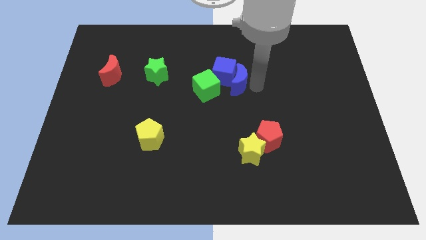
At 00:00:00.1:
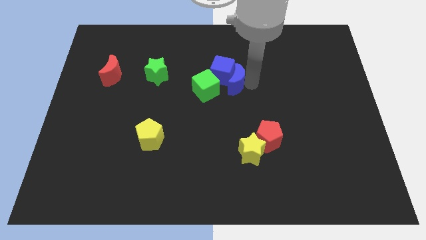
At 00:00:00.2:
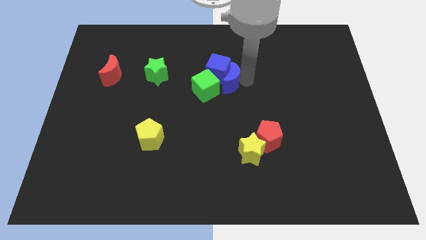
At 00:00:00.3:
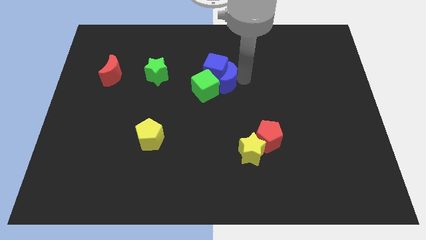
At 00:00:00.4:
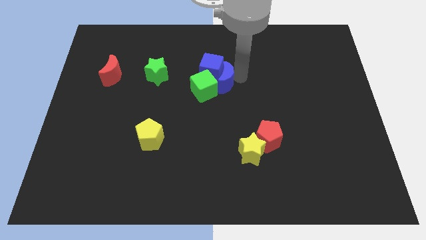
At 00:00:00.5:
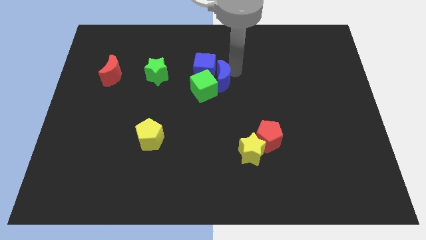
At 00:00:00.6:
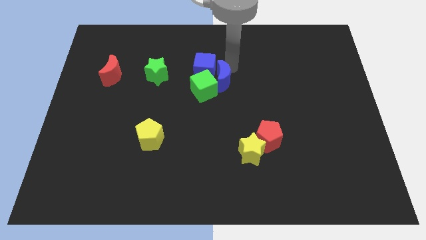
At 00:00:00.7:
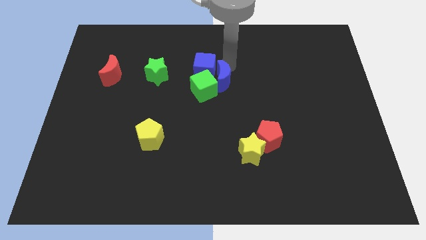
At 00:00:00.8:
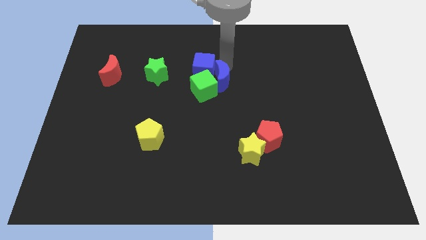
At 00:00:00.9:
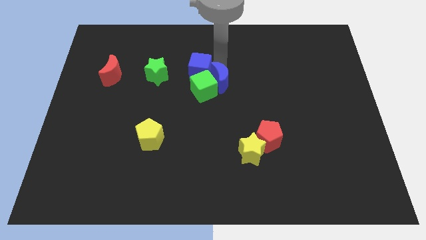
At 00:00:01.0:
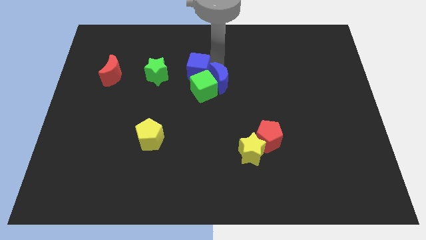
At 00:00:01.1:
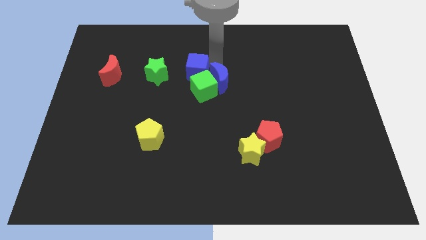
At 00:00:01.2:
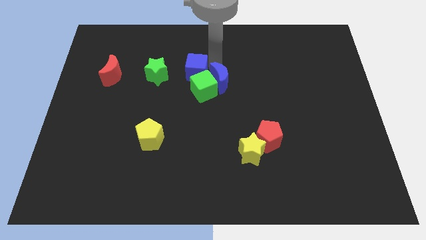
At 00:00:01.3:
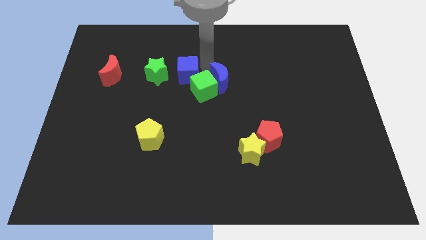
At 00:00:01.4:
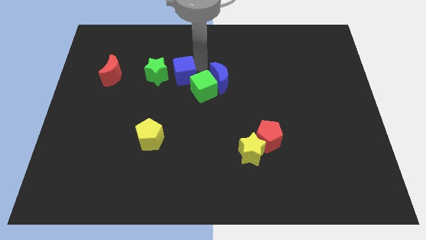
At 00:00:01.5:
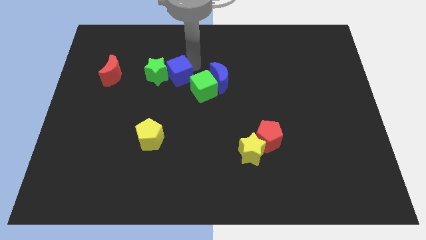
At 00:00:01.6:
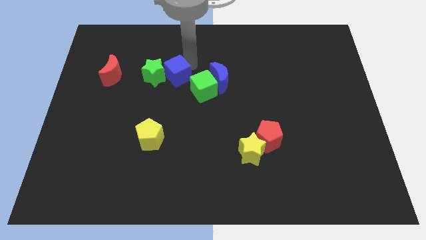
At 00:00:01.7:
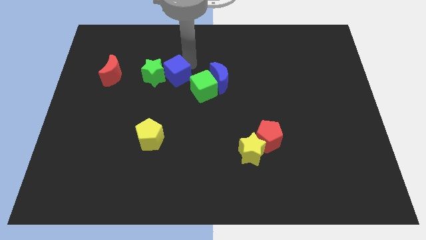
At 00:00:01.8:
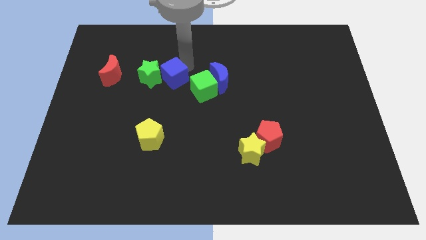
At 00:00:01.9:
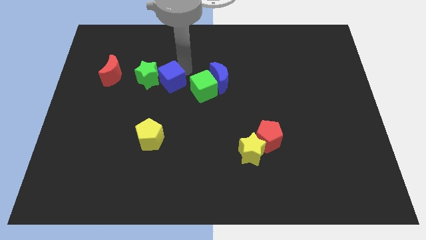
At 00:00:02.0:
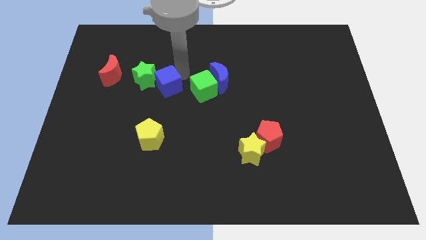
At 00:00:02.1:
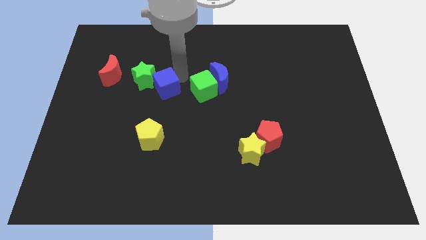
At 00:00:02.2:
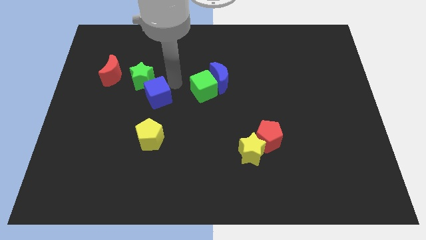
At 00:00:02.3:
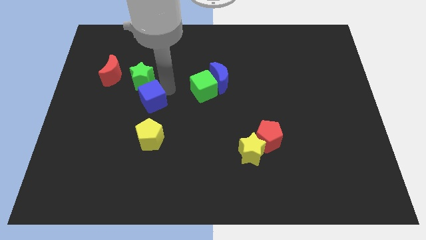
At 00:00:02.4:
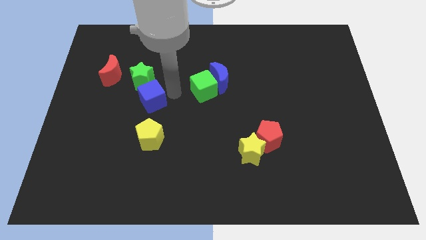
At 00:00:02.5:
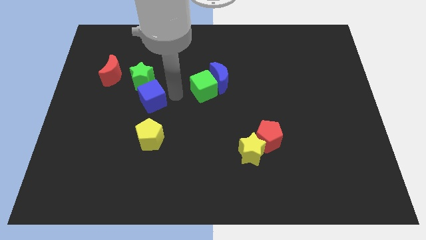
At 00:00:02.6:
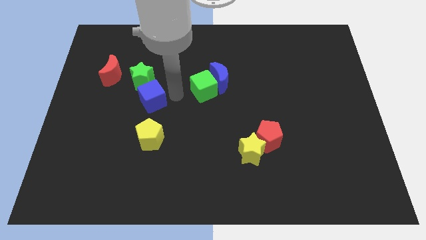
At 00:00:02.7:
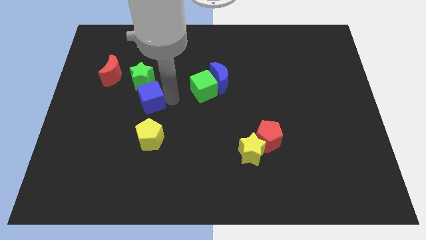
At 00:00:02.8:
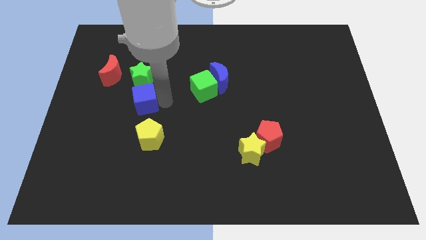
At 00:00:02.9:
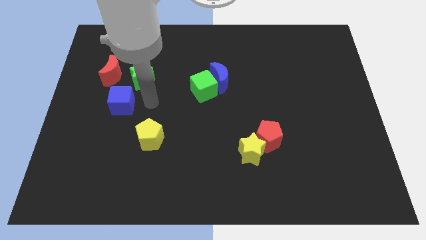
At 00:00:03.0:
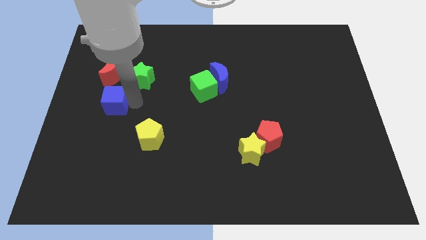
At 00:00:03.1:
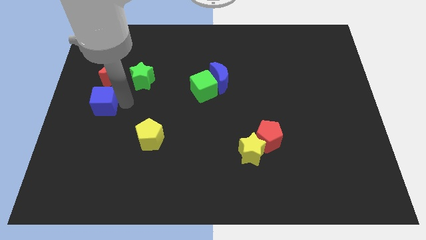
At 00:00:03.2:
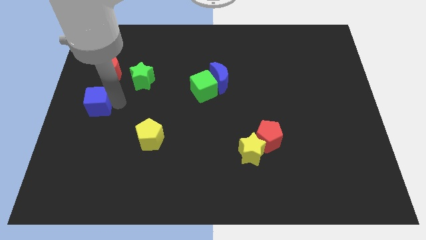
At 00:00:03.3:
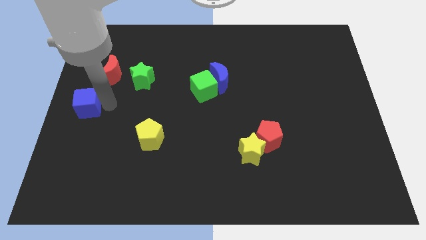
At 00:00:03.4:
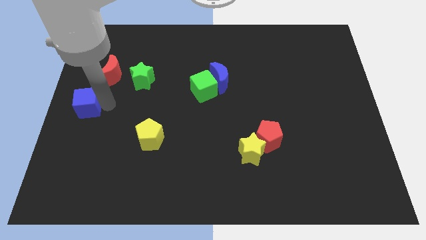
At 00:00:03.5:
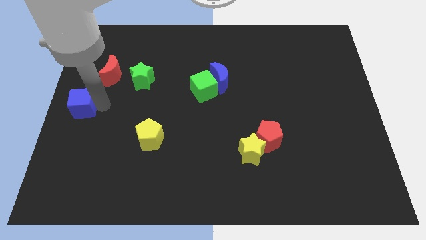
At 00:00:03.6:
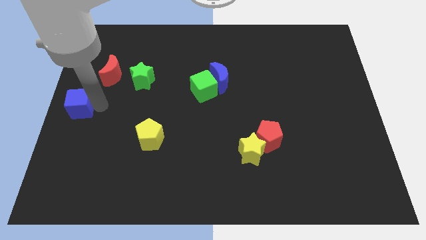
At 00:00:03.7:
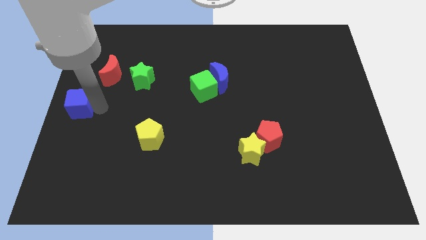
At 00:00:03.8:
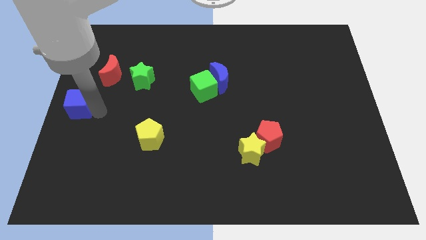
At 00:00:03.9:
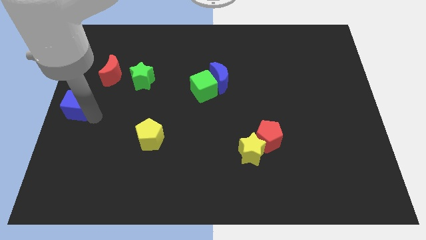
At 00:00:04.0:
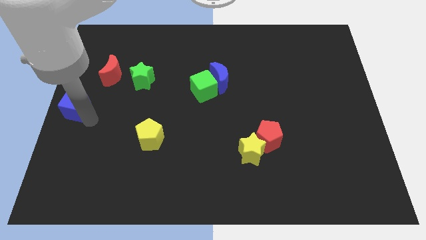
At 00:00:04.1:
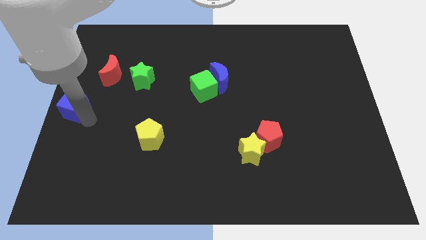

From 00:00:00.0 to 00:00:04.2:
move the blue cube to the left center of the board

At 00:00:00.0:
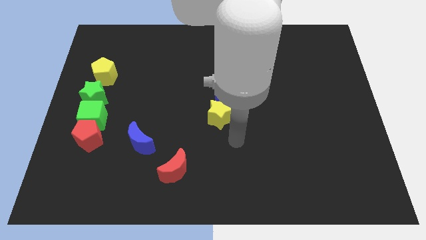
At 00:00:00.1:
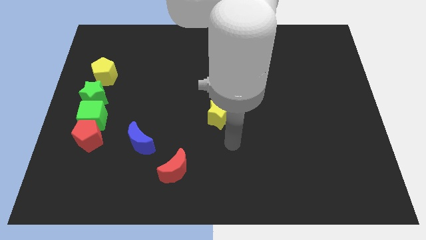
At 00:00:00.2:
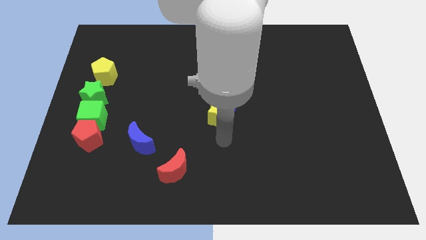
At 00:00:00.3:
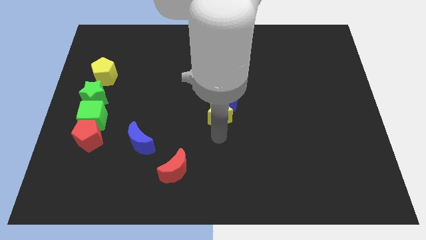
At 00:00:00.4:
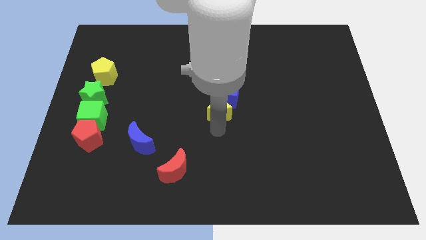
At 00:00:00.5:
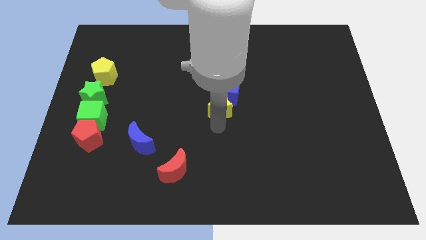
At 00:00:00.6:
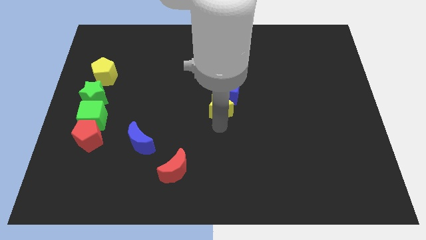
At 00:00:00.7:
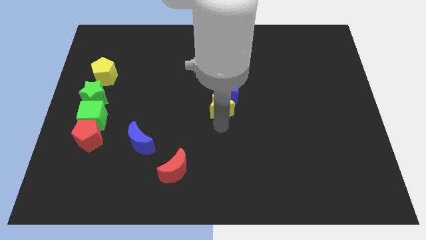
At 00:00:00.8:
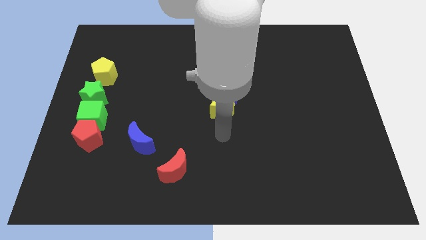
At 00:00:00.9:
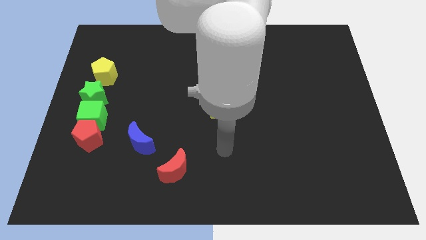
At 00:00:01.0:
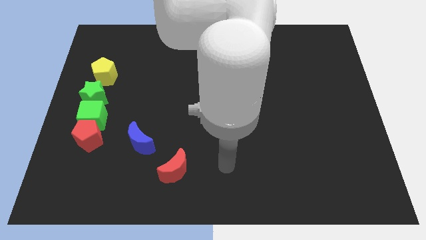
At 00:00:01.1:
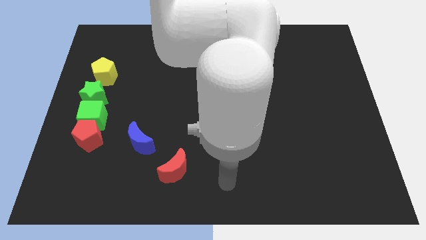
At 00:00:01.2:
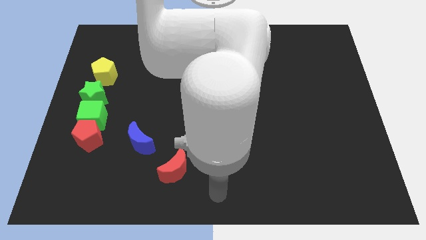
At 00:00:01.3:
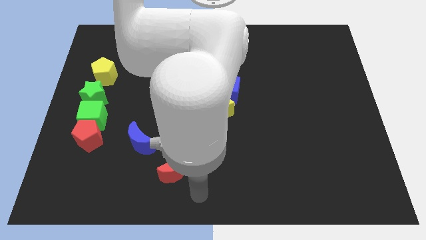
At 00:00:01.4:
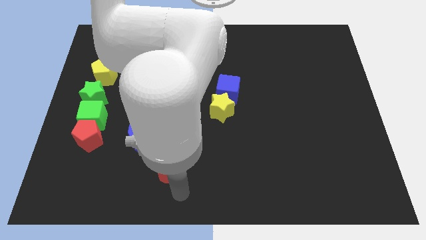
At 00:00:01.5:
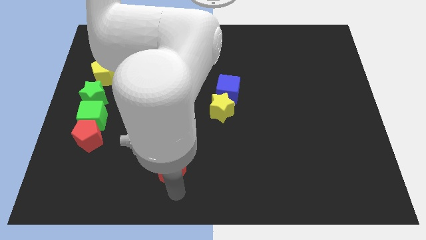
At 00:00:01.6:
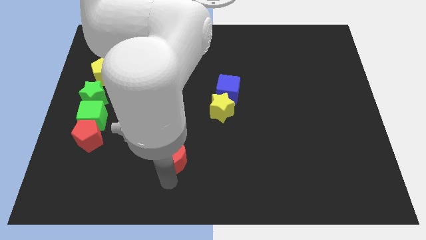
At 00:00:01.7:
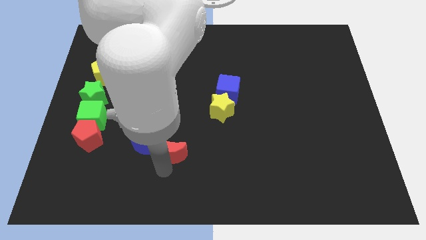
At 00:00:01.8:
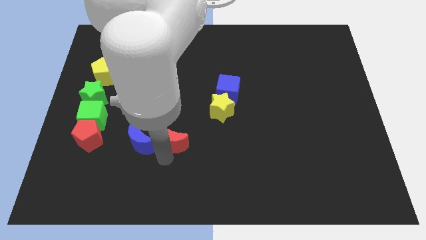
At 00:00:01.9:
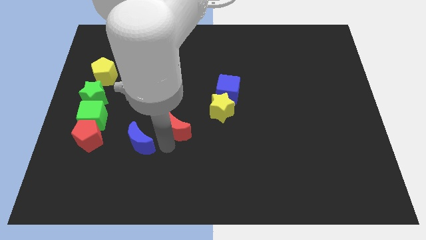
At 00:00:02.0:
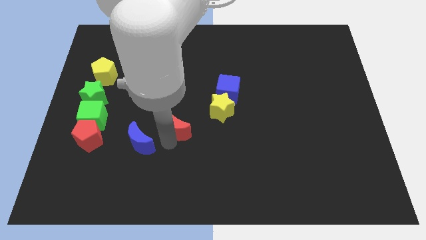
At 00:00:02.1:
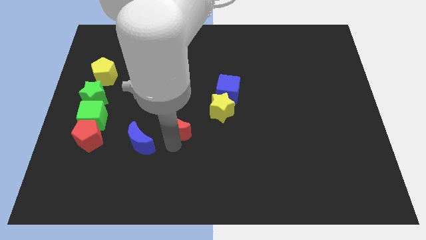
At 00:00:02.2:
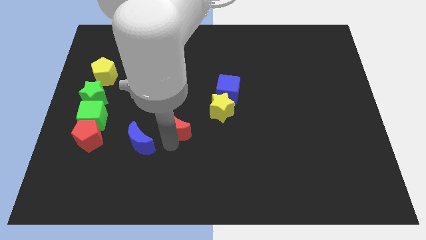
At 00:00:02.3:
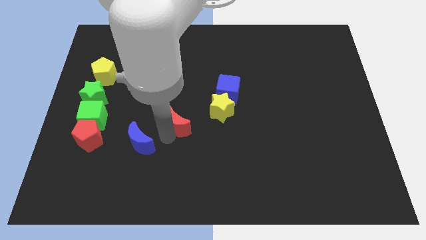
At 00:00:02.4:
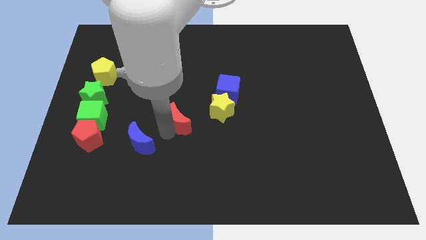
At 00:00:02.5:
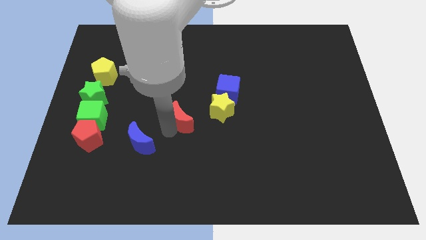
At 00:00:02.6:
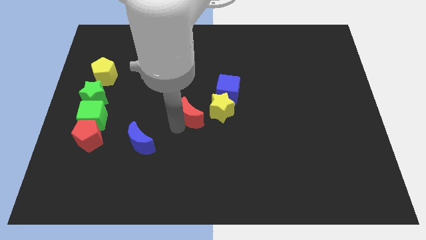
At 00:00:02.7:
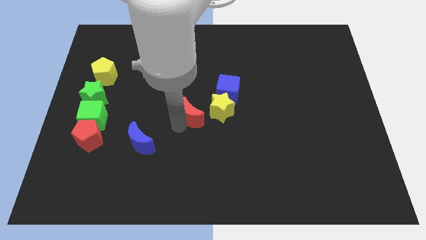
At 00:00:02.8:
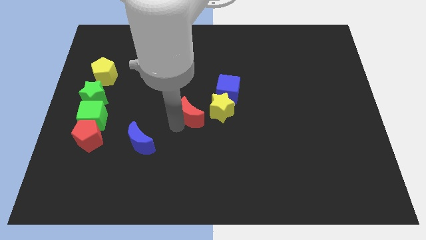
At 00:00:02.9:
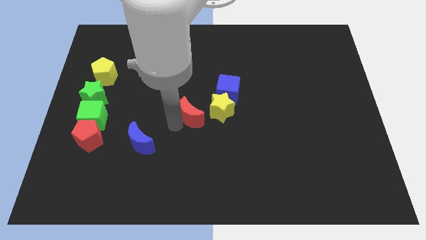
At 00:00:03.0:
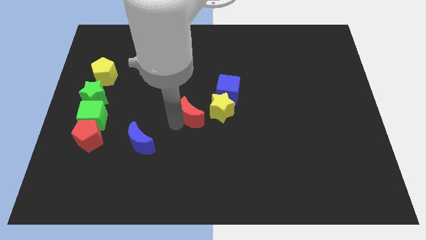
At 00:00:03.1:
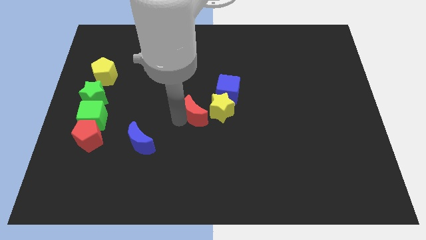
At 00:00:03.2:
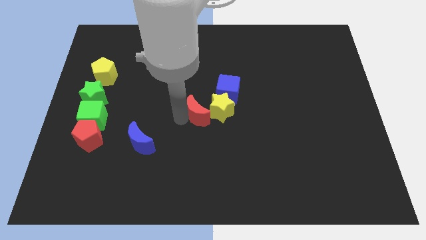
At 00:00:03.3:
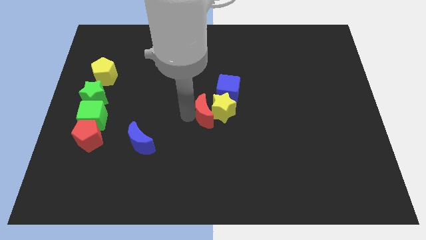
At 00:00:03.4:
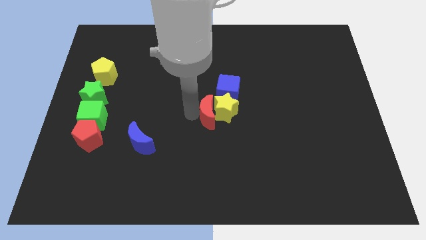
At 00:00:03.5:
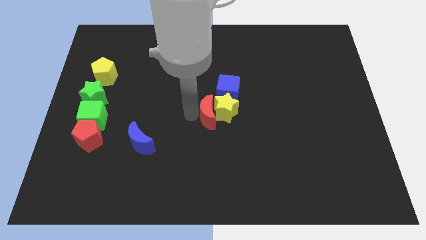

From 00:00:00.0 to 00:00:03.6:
place the red moon to the left of the yellow star

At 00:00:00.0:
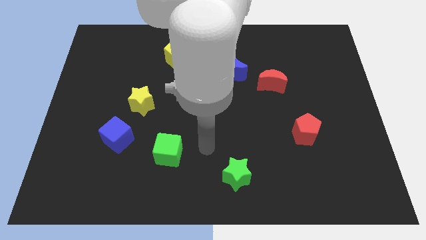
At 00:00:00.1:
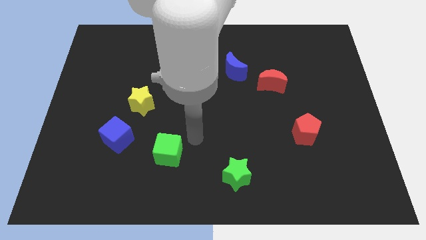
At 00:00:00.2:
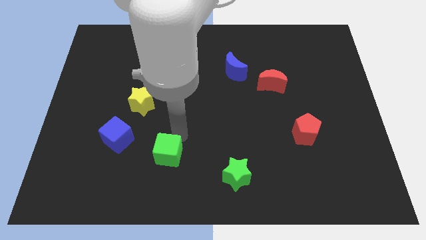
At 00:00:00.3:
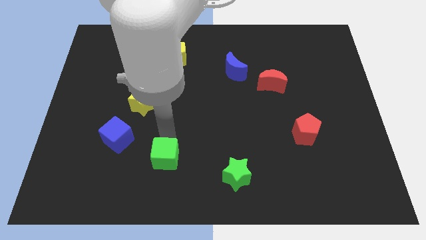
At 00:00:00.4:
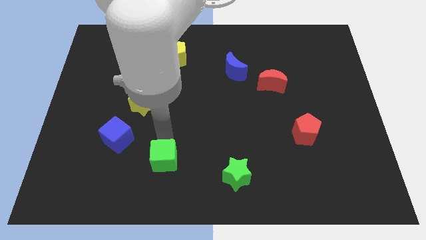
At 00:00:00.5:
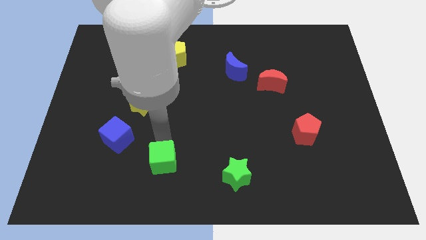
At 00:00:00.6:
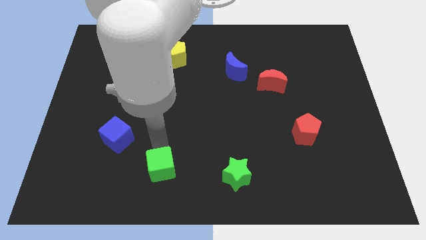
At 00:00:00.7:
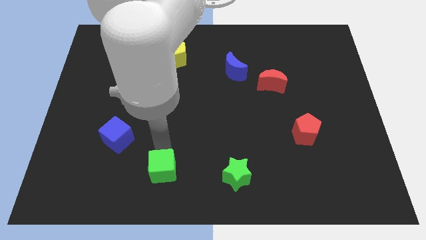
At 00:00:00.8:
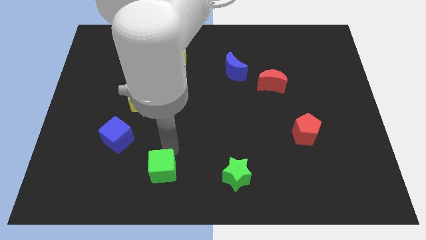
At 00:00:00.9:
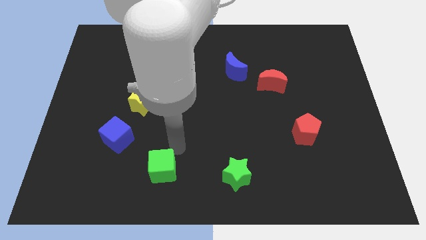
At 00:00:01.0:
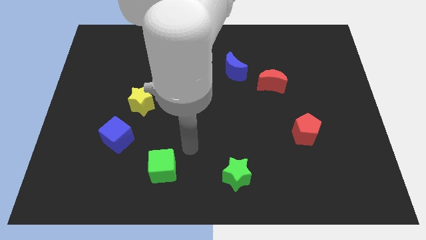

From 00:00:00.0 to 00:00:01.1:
move the green cube to the bottom of the board
